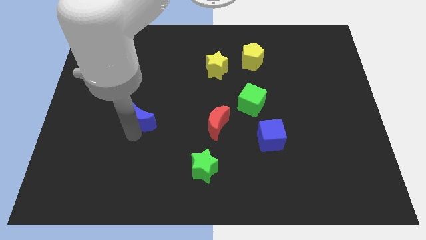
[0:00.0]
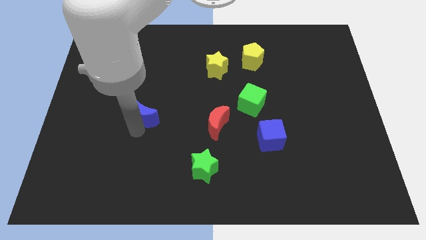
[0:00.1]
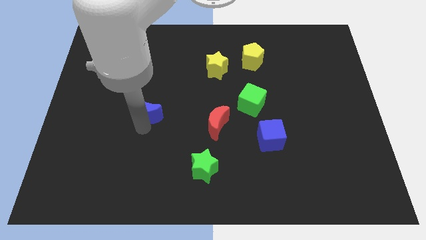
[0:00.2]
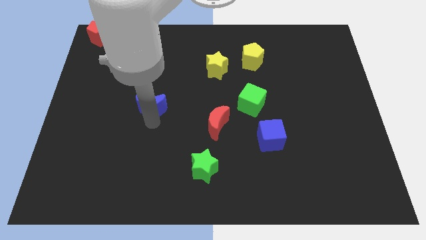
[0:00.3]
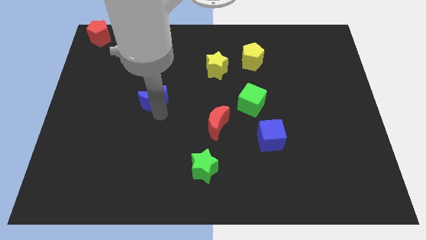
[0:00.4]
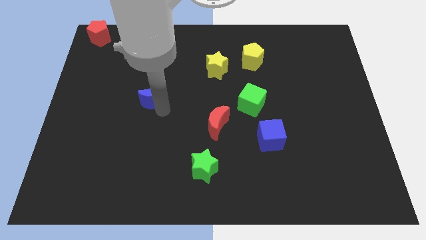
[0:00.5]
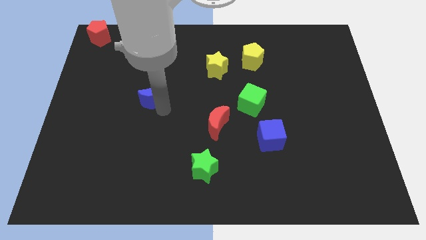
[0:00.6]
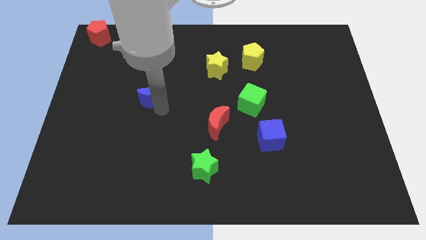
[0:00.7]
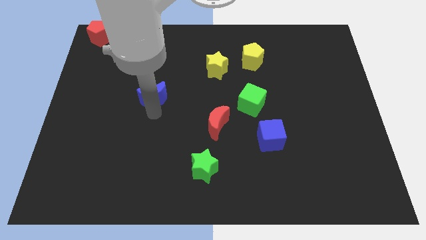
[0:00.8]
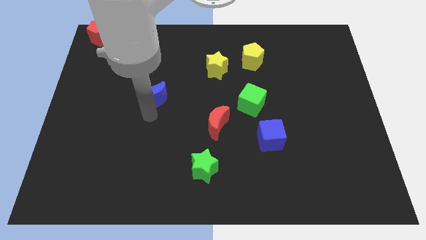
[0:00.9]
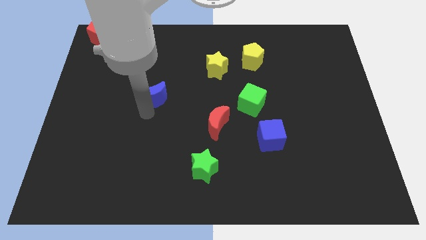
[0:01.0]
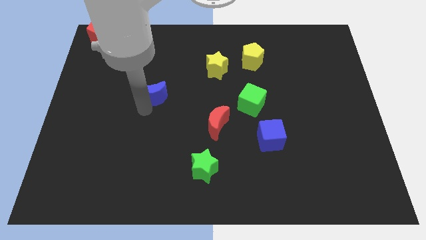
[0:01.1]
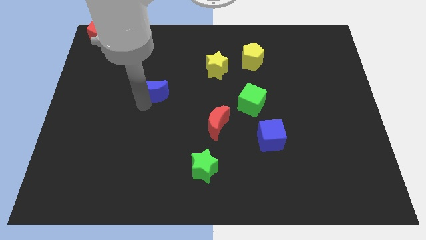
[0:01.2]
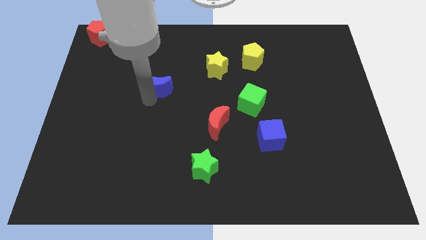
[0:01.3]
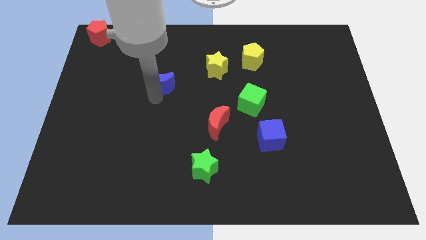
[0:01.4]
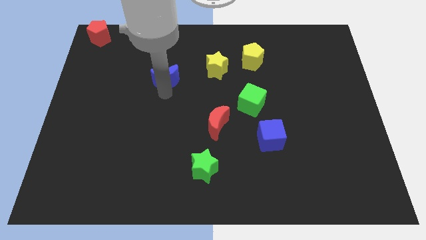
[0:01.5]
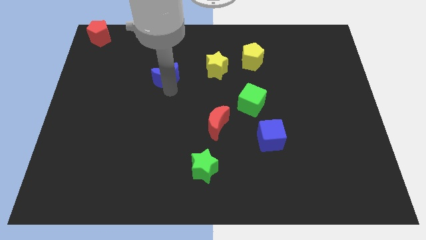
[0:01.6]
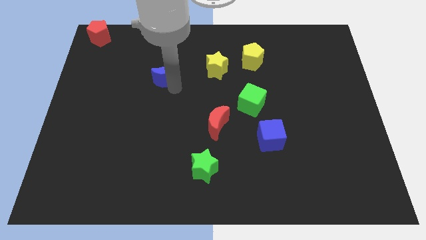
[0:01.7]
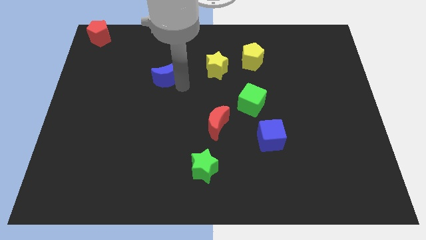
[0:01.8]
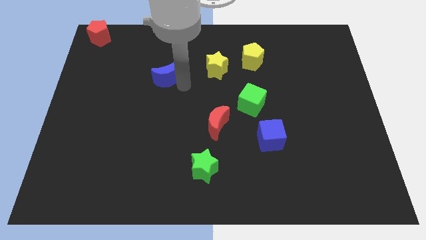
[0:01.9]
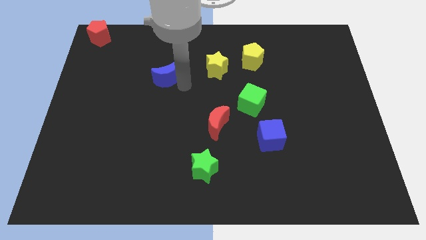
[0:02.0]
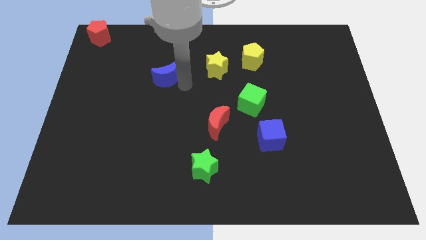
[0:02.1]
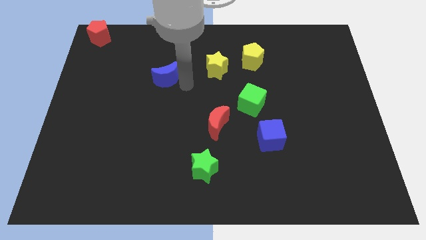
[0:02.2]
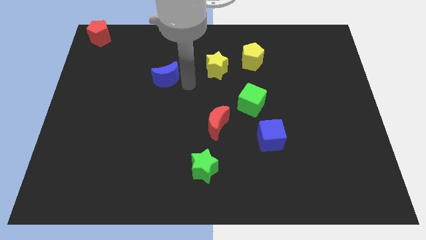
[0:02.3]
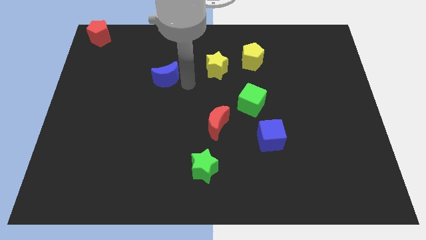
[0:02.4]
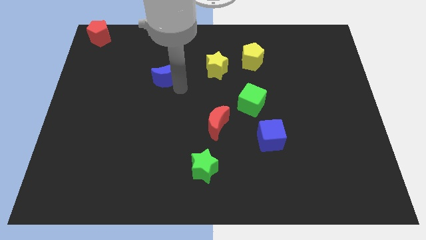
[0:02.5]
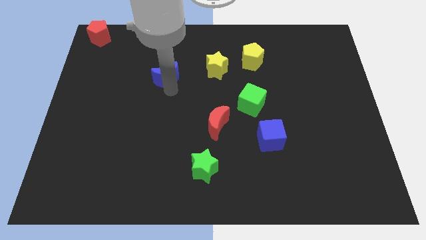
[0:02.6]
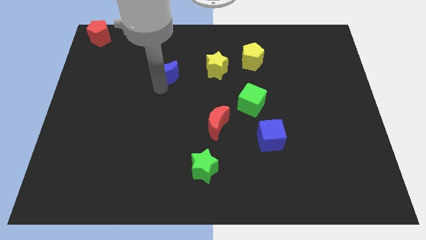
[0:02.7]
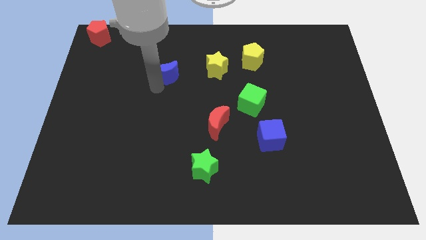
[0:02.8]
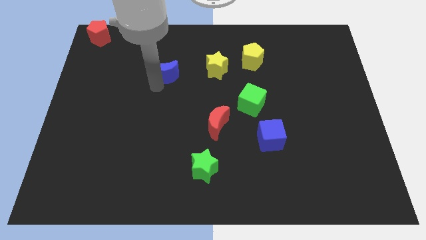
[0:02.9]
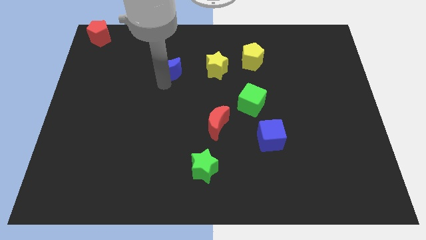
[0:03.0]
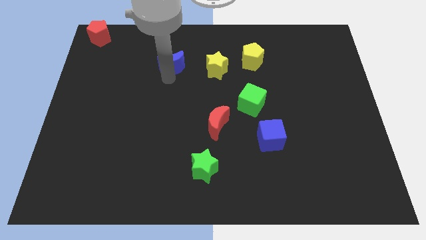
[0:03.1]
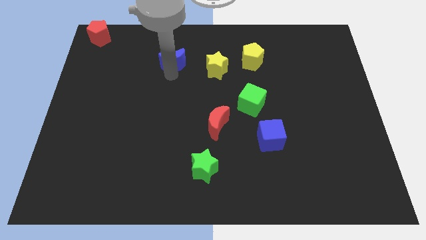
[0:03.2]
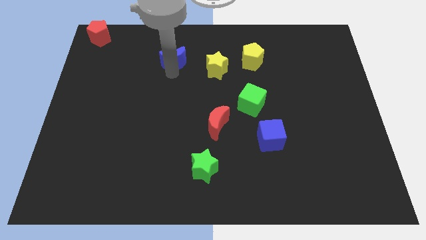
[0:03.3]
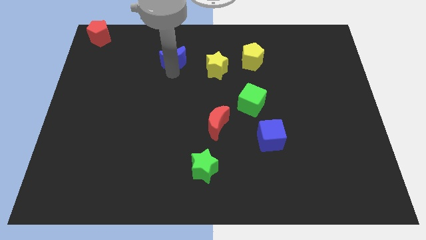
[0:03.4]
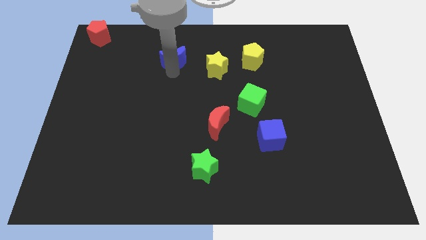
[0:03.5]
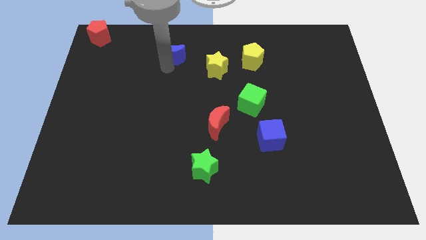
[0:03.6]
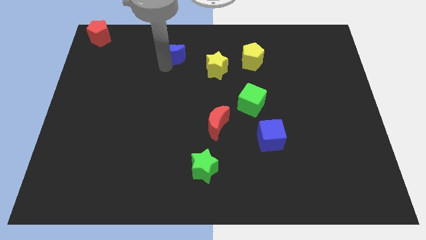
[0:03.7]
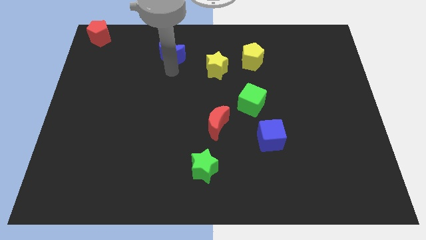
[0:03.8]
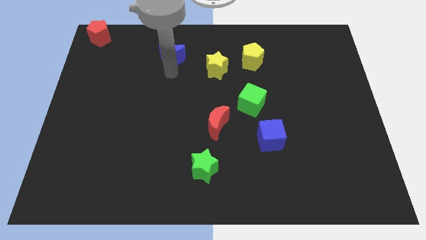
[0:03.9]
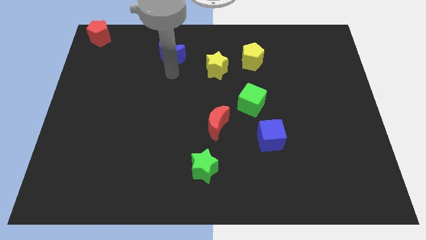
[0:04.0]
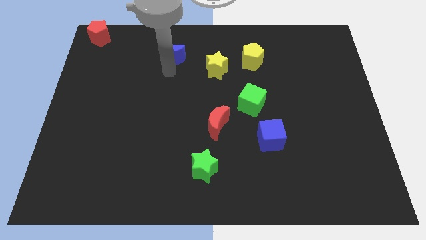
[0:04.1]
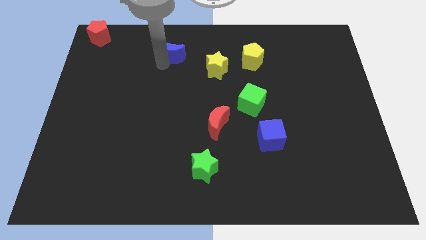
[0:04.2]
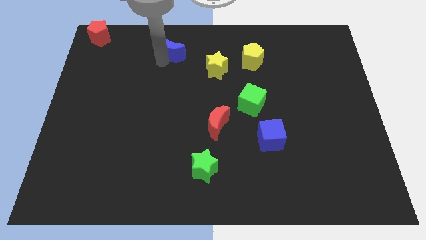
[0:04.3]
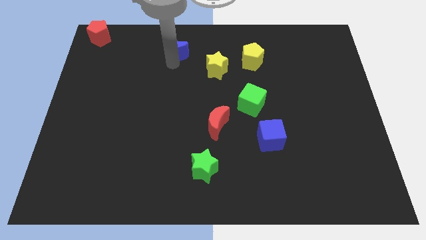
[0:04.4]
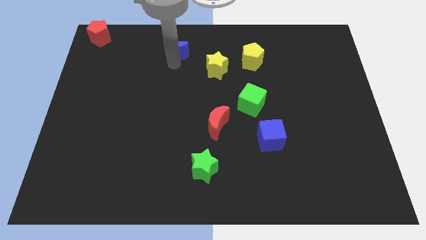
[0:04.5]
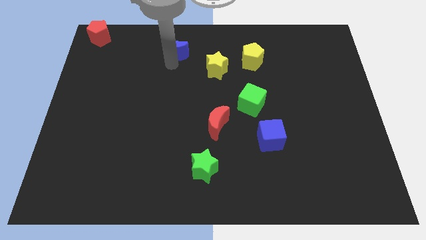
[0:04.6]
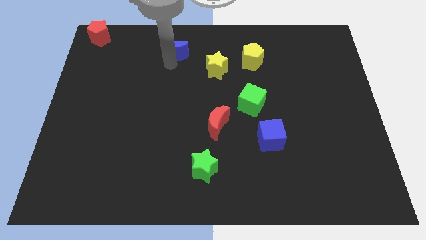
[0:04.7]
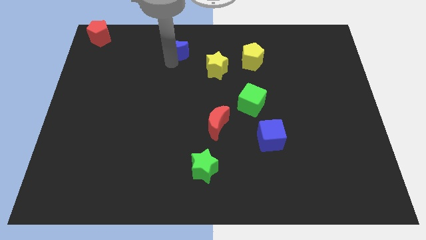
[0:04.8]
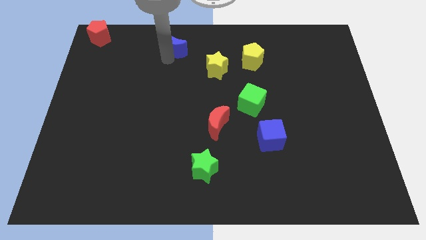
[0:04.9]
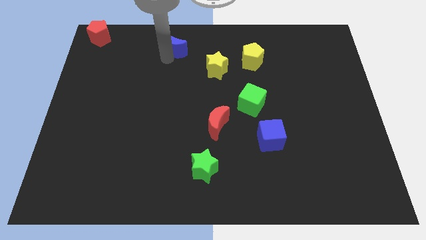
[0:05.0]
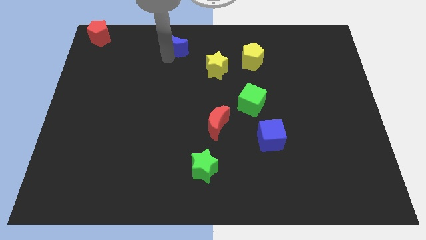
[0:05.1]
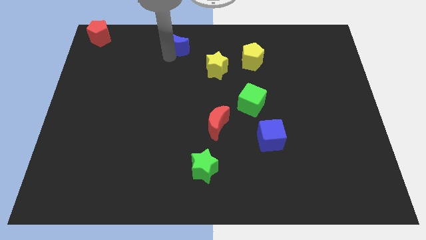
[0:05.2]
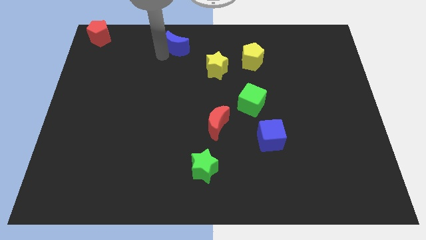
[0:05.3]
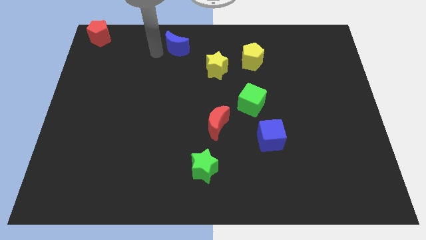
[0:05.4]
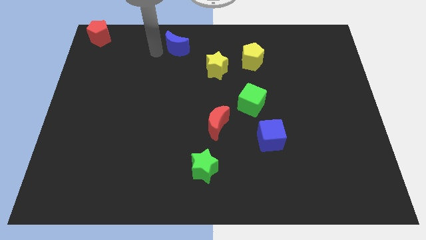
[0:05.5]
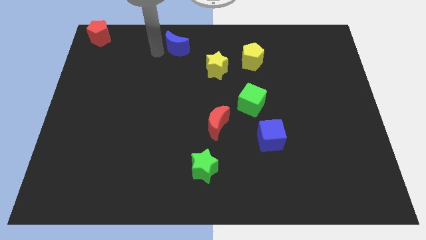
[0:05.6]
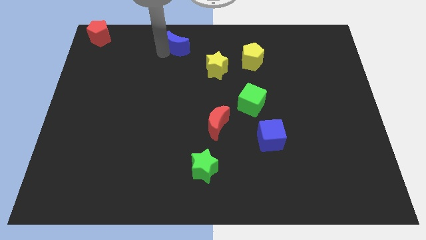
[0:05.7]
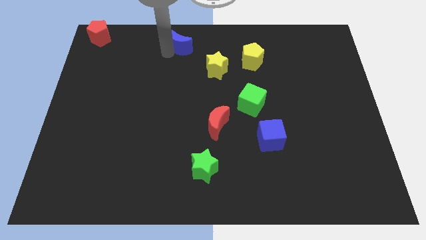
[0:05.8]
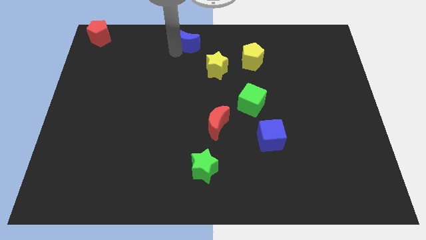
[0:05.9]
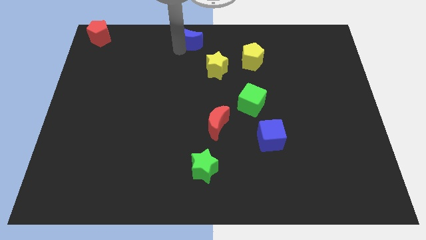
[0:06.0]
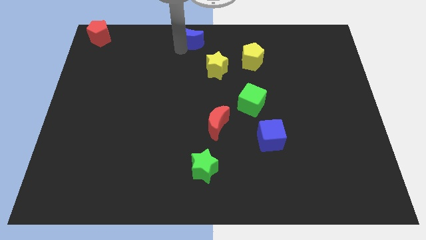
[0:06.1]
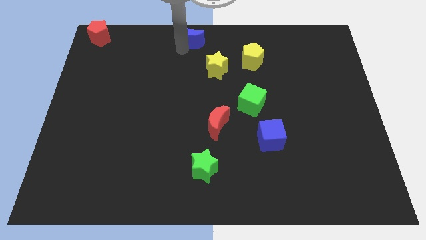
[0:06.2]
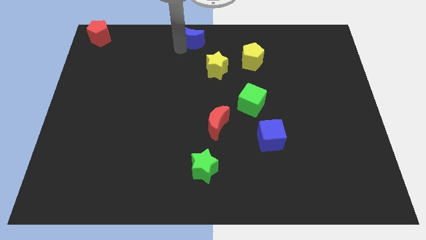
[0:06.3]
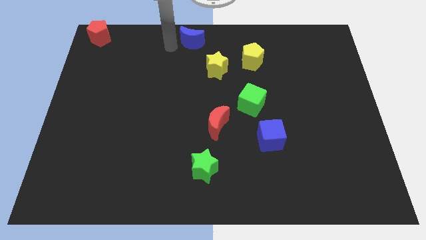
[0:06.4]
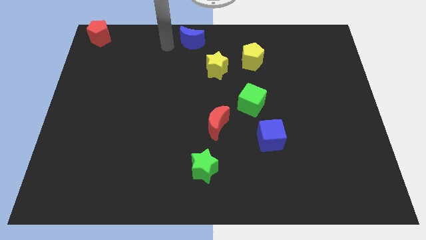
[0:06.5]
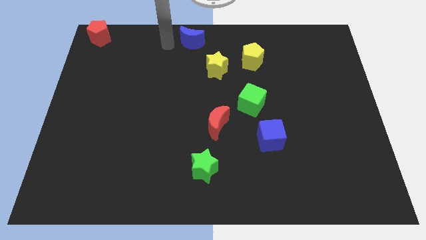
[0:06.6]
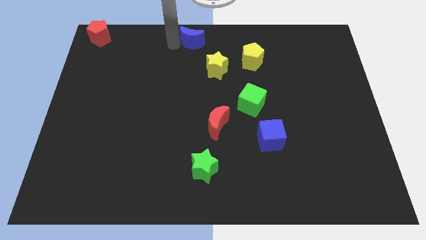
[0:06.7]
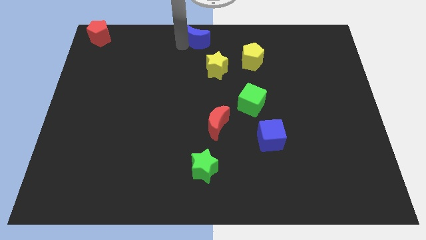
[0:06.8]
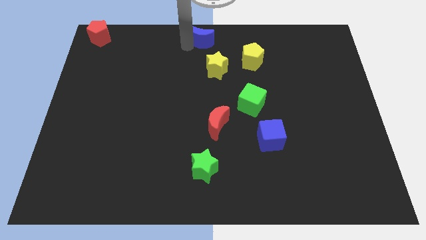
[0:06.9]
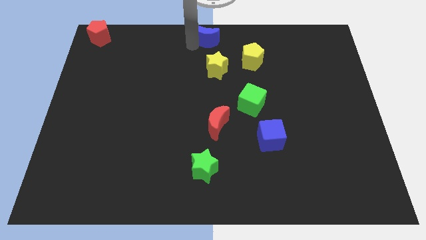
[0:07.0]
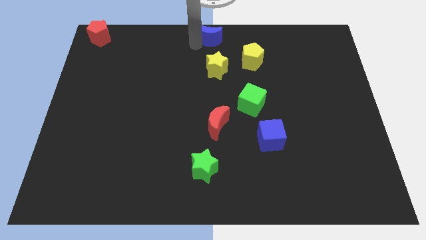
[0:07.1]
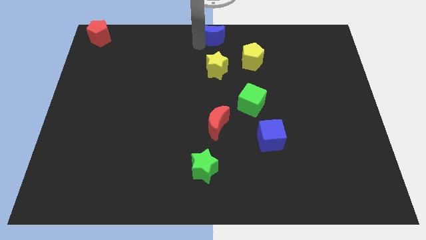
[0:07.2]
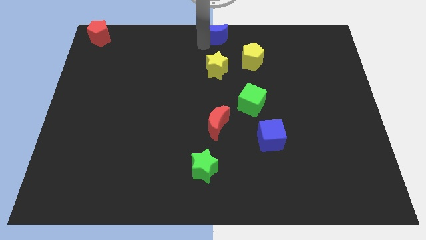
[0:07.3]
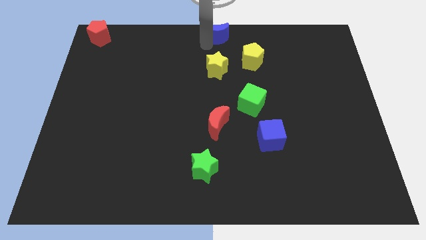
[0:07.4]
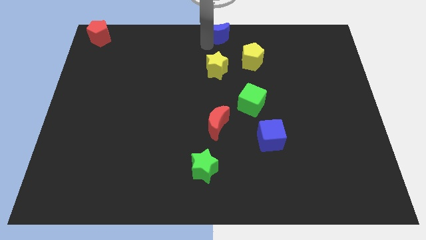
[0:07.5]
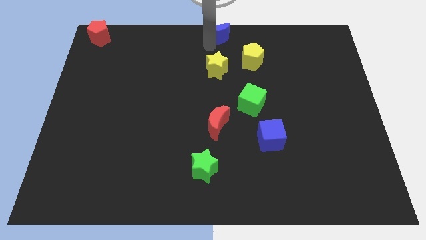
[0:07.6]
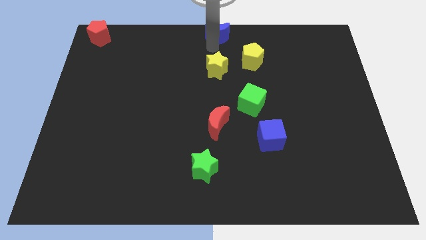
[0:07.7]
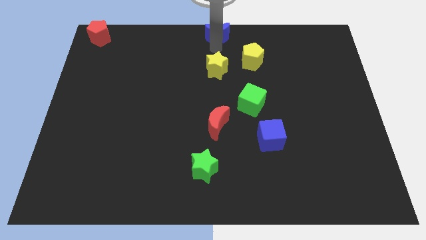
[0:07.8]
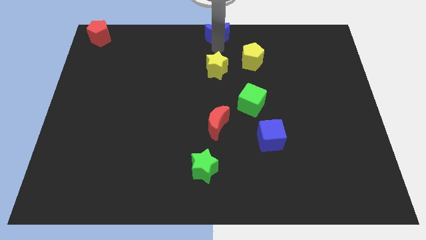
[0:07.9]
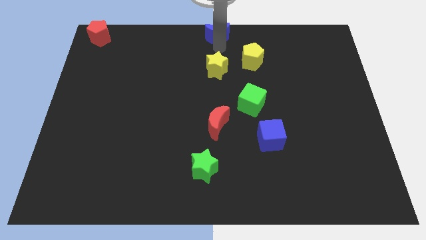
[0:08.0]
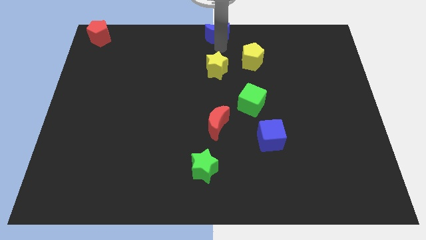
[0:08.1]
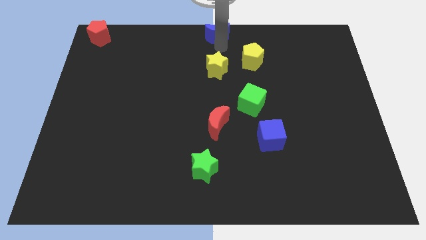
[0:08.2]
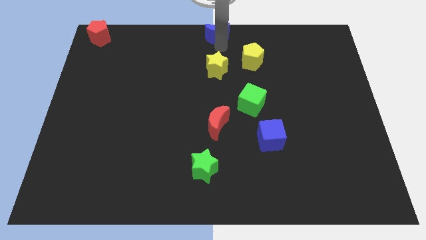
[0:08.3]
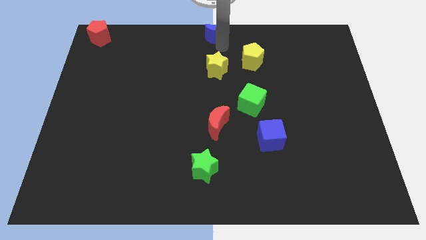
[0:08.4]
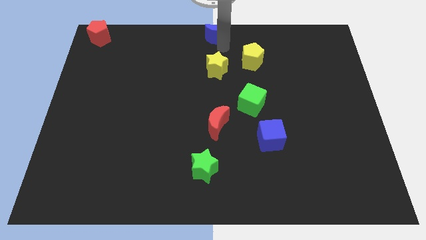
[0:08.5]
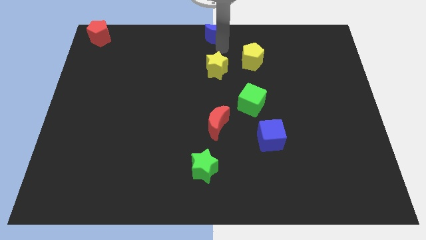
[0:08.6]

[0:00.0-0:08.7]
push the blue crescent towards the top center of the board
